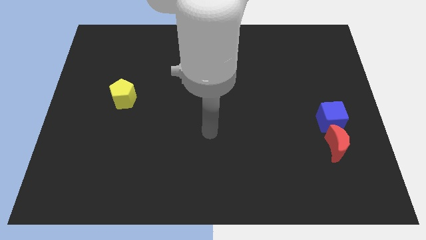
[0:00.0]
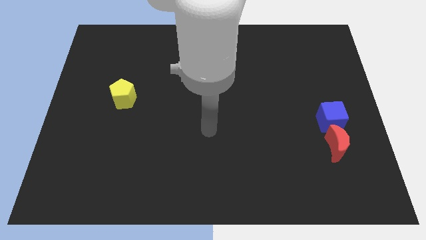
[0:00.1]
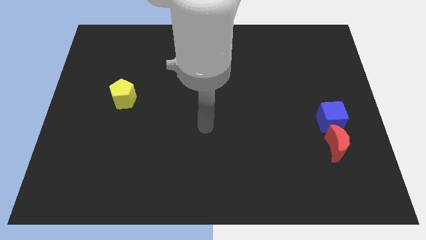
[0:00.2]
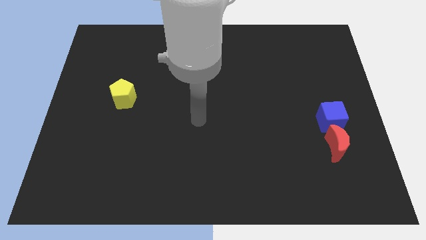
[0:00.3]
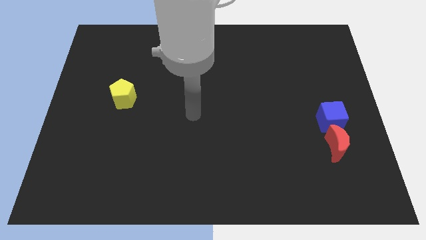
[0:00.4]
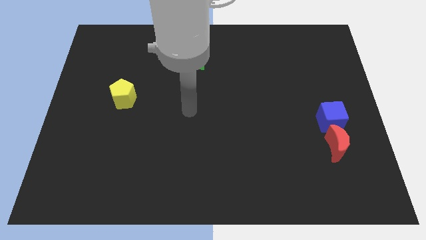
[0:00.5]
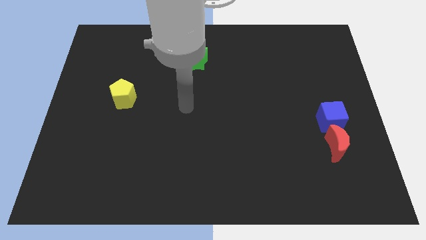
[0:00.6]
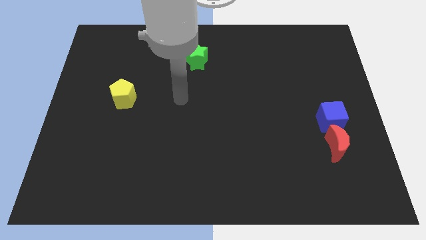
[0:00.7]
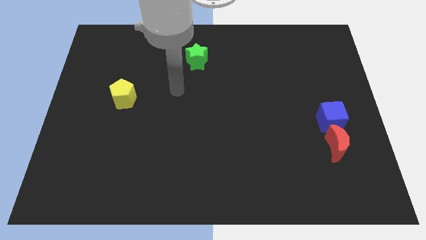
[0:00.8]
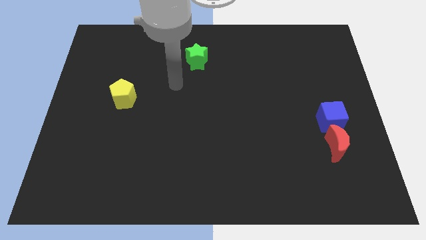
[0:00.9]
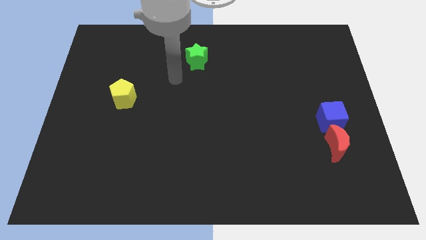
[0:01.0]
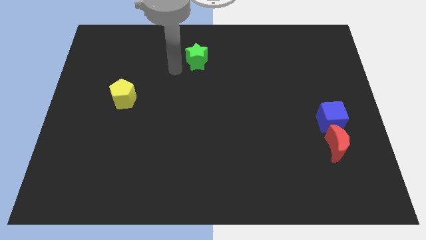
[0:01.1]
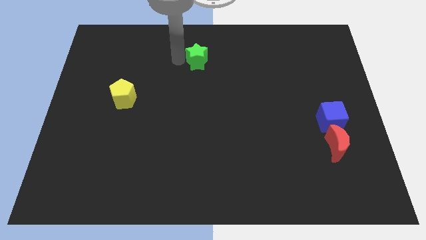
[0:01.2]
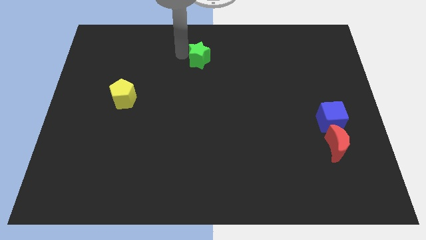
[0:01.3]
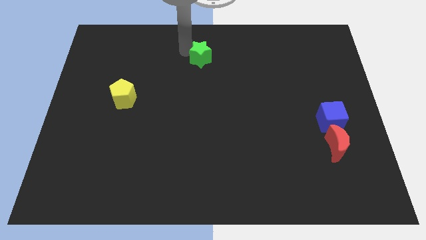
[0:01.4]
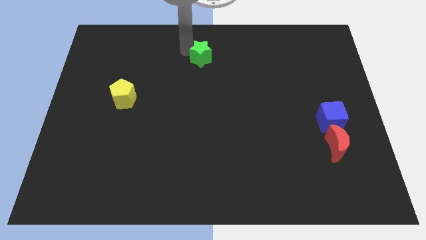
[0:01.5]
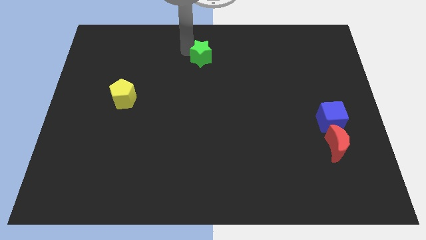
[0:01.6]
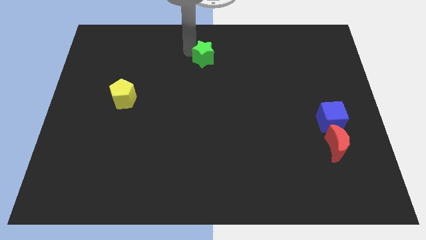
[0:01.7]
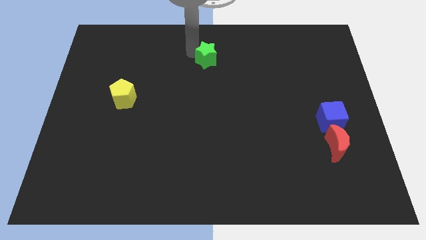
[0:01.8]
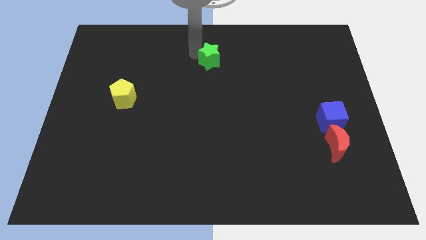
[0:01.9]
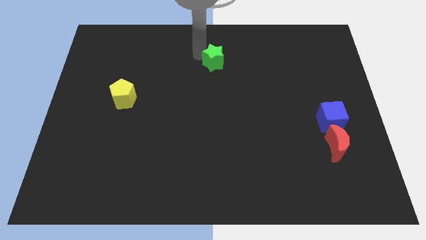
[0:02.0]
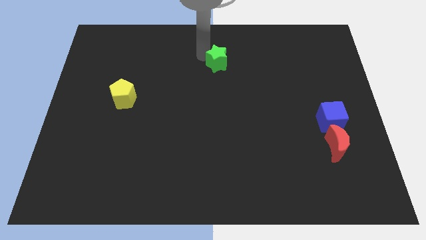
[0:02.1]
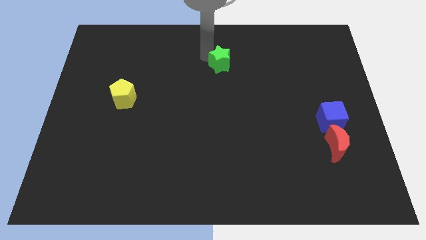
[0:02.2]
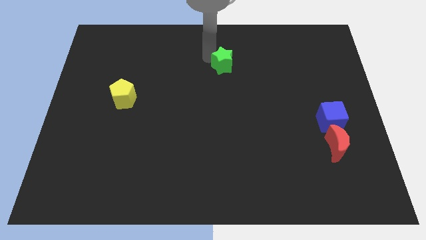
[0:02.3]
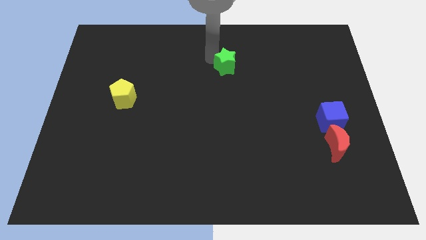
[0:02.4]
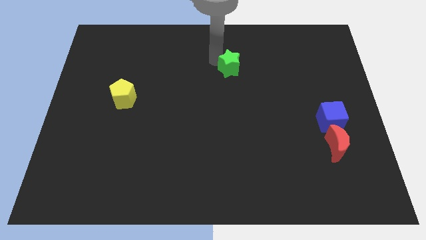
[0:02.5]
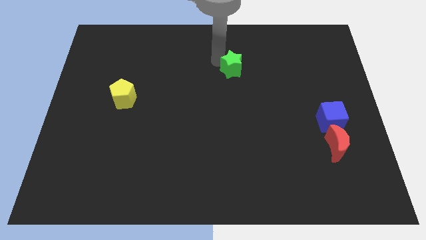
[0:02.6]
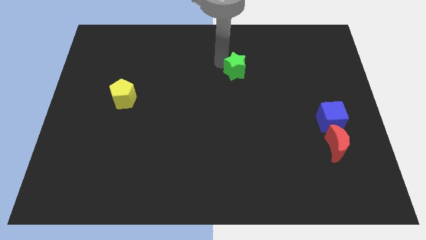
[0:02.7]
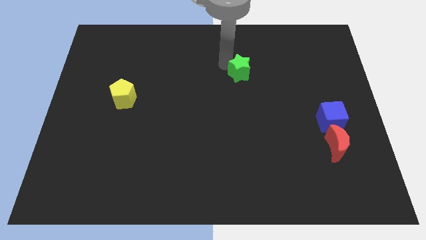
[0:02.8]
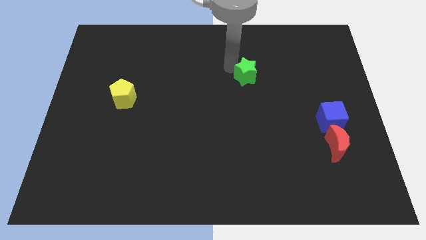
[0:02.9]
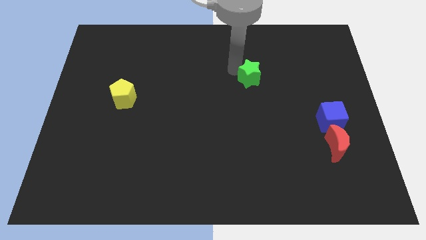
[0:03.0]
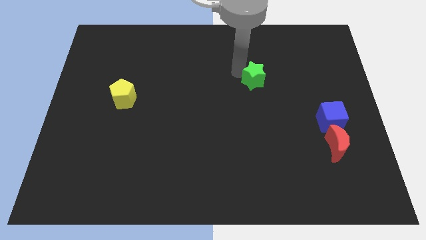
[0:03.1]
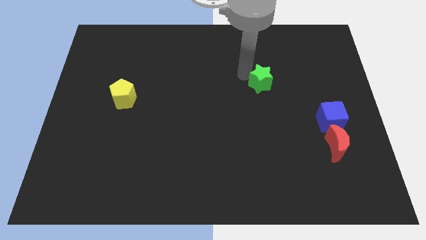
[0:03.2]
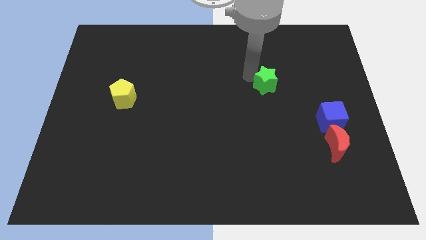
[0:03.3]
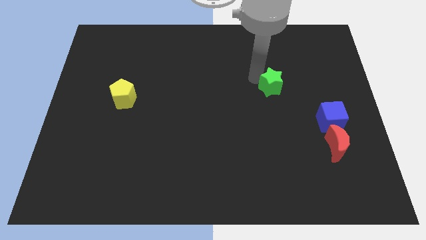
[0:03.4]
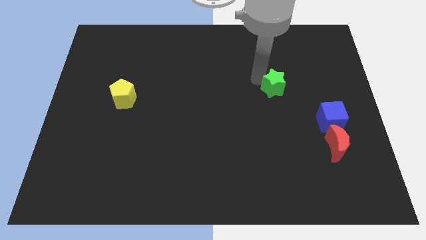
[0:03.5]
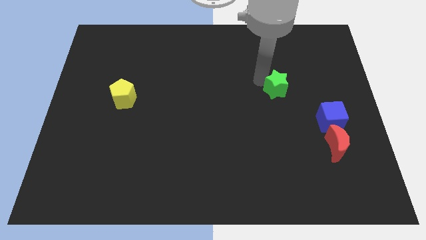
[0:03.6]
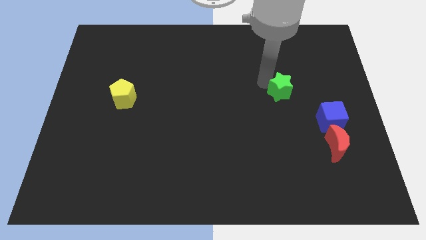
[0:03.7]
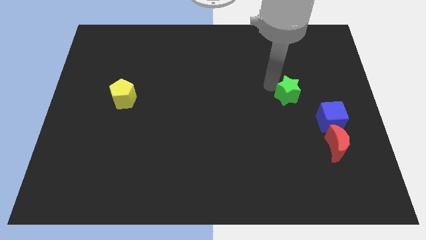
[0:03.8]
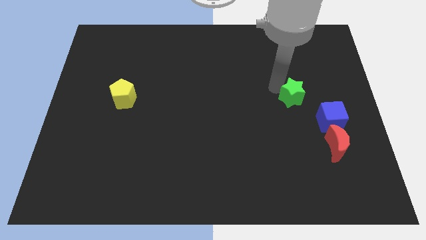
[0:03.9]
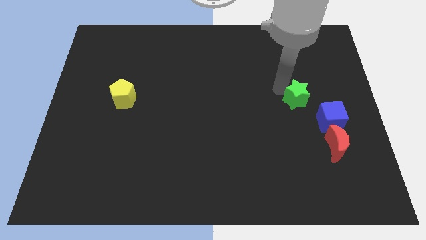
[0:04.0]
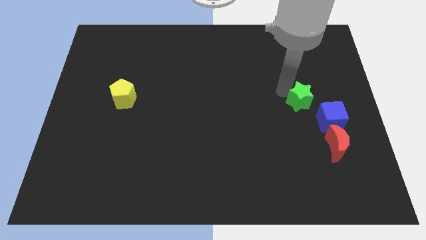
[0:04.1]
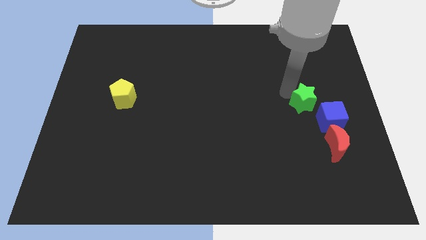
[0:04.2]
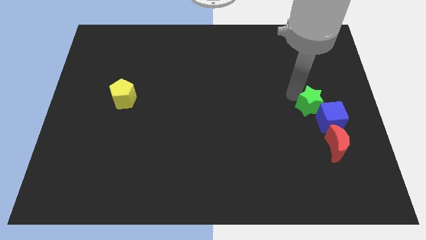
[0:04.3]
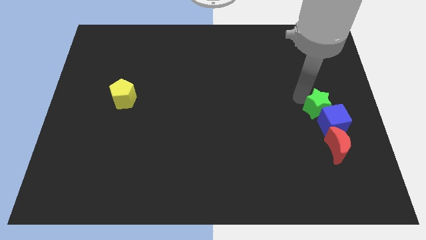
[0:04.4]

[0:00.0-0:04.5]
slide the green block towards the blue block

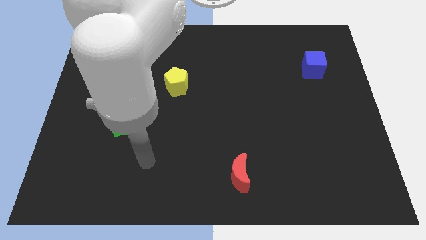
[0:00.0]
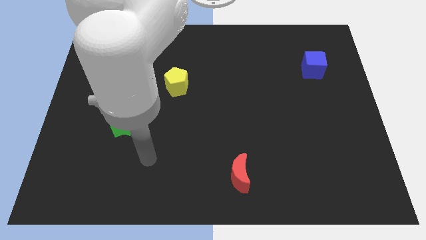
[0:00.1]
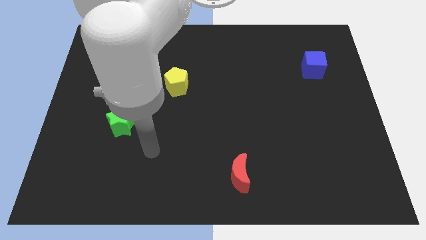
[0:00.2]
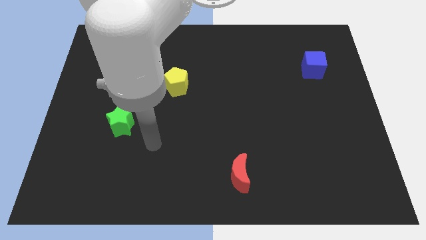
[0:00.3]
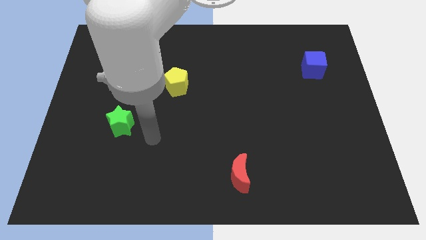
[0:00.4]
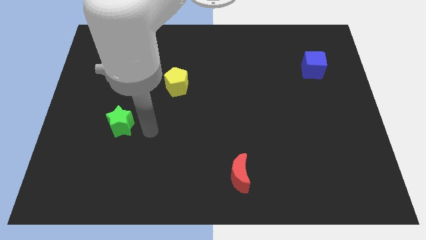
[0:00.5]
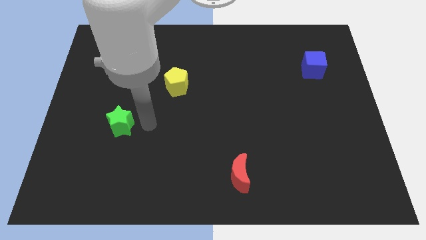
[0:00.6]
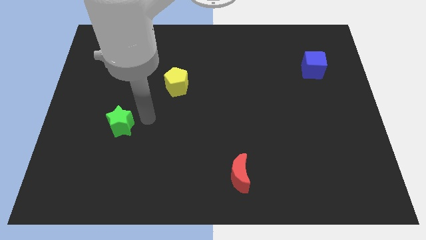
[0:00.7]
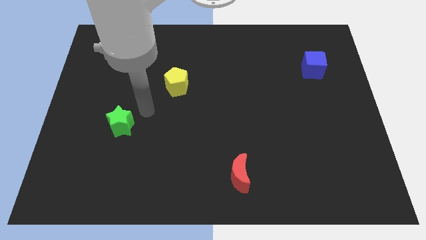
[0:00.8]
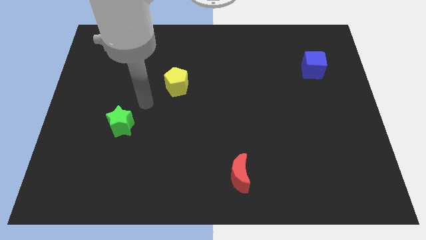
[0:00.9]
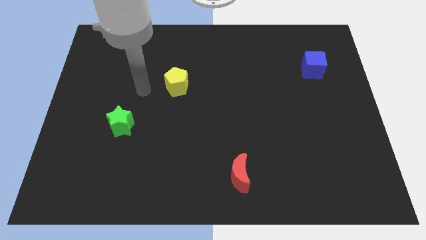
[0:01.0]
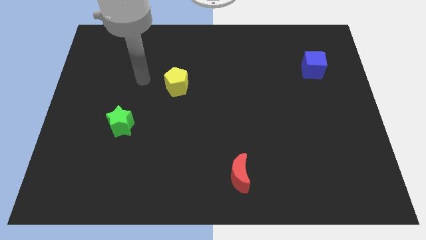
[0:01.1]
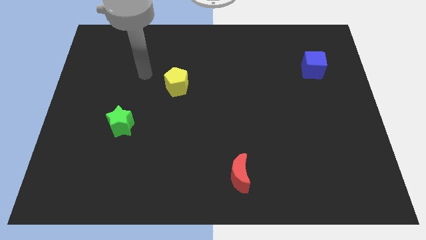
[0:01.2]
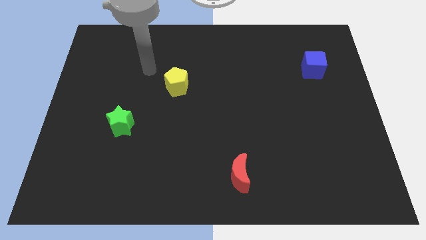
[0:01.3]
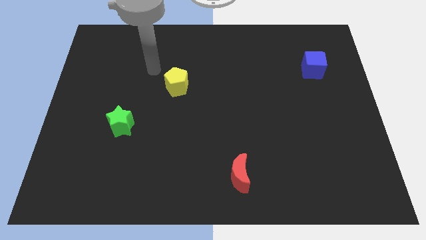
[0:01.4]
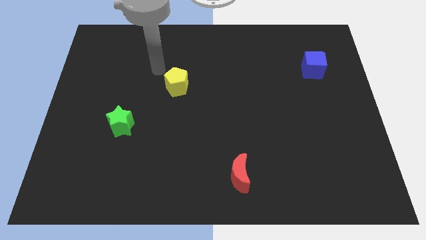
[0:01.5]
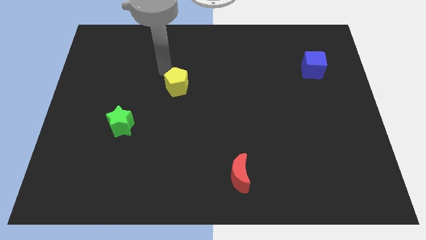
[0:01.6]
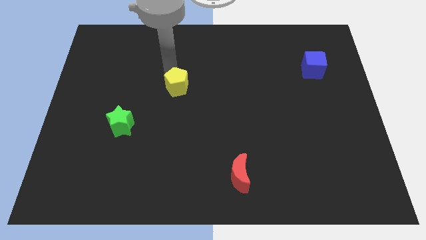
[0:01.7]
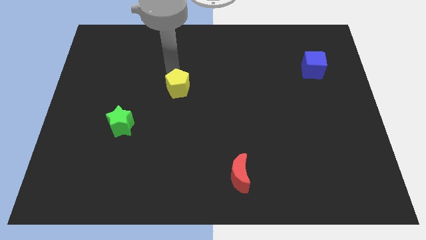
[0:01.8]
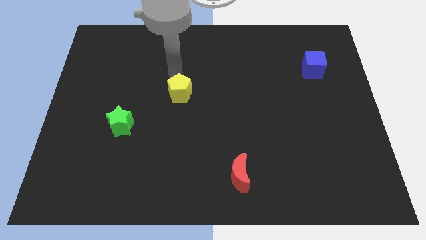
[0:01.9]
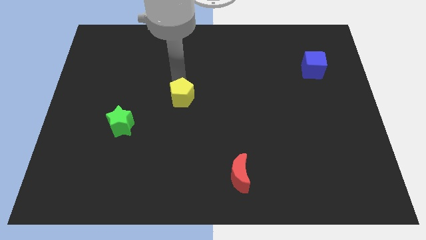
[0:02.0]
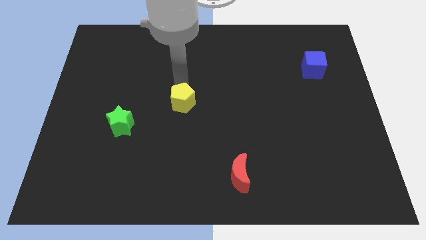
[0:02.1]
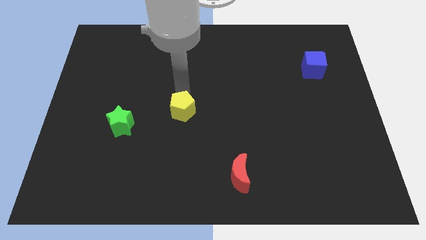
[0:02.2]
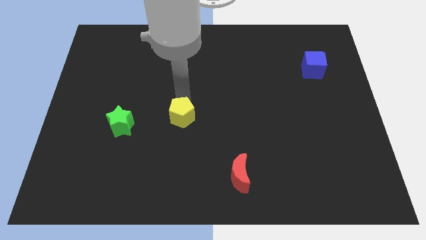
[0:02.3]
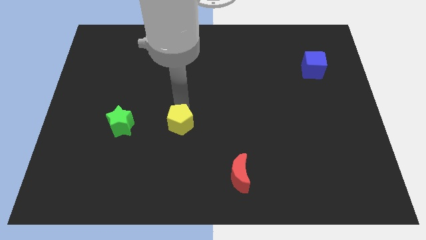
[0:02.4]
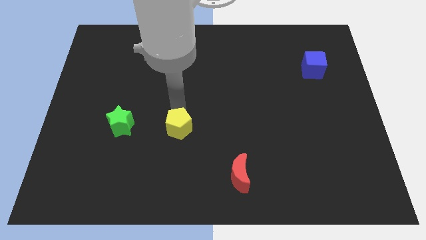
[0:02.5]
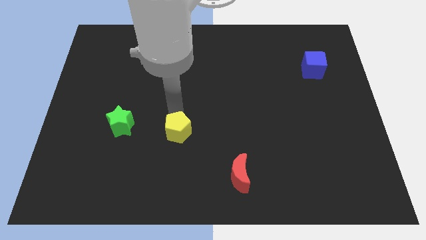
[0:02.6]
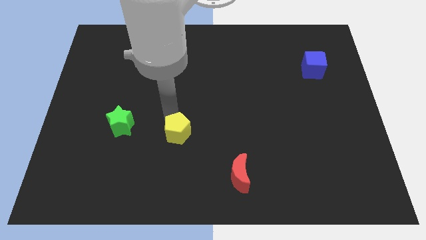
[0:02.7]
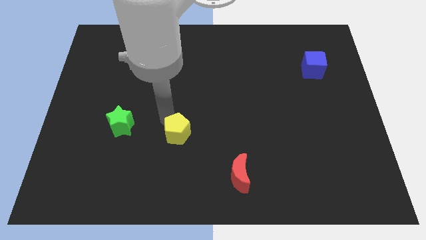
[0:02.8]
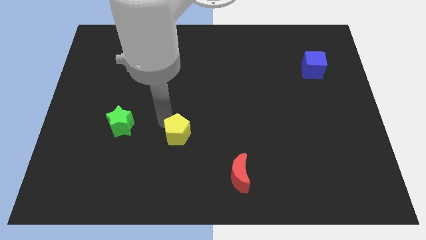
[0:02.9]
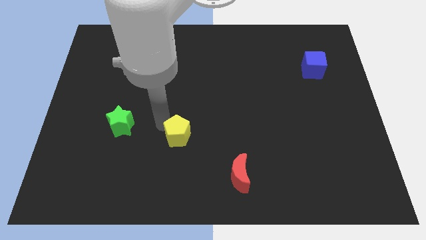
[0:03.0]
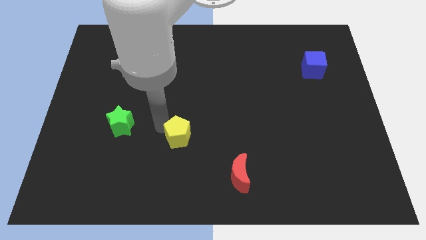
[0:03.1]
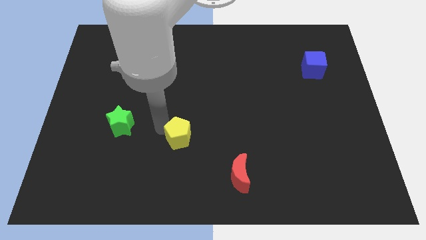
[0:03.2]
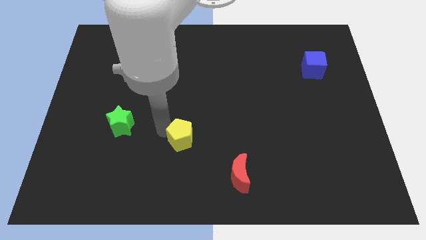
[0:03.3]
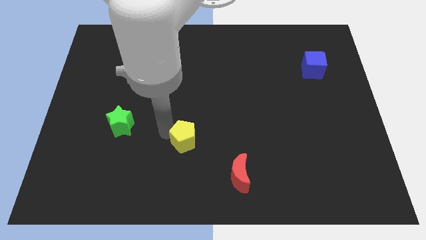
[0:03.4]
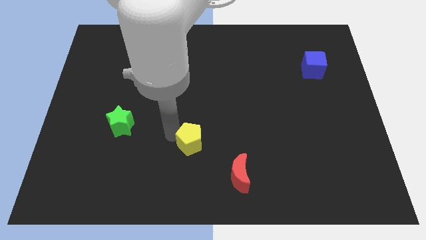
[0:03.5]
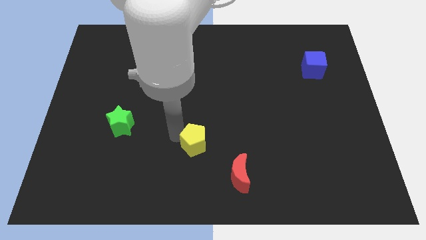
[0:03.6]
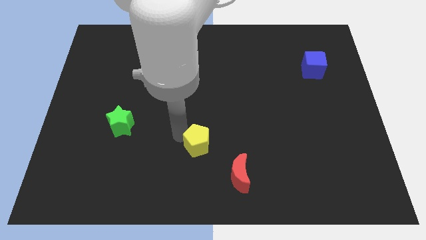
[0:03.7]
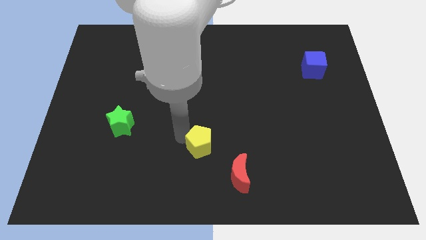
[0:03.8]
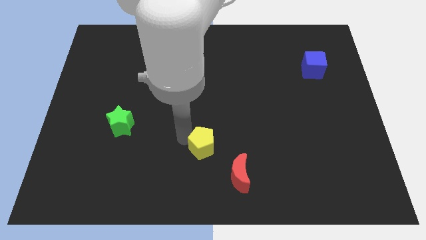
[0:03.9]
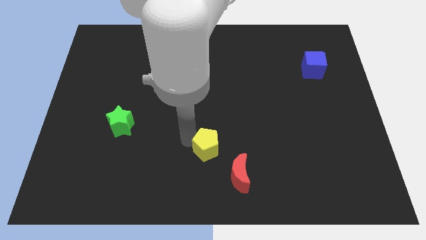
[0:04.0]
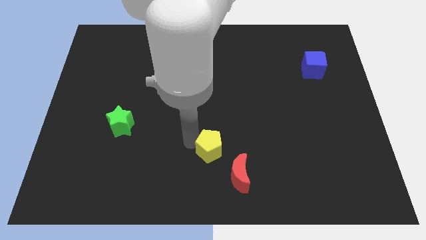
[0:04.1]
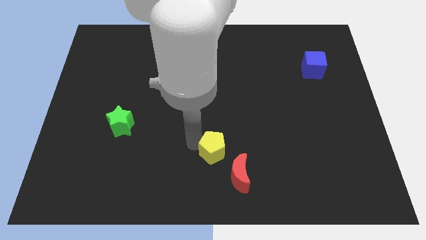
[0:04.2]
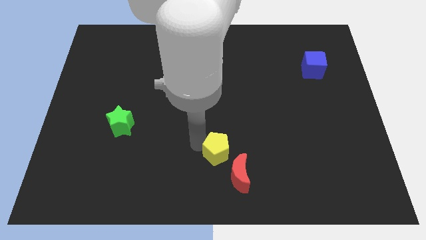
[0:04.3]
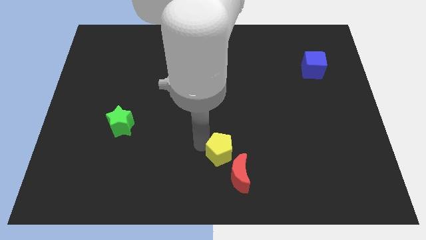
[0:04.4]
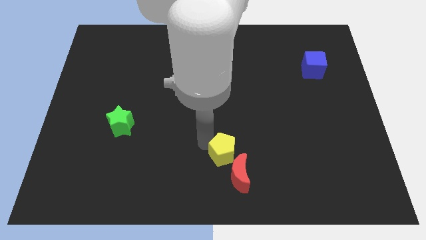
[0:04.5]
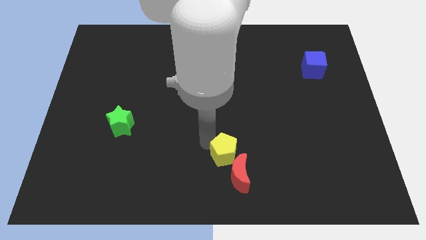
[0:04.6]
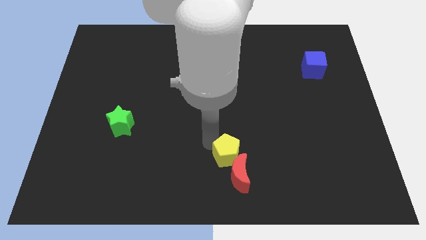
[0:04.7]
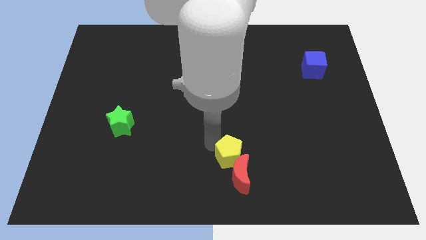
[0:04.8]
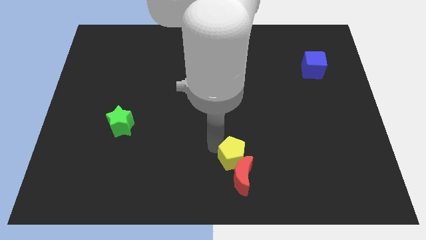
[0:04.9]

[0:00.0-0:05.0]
push the yellow block close to the red moon
